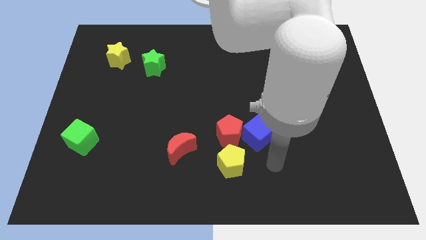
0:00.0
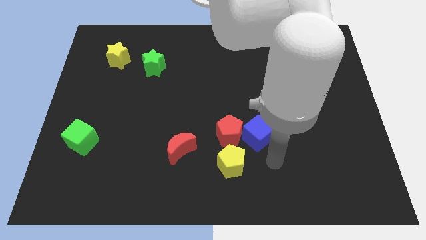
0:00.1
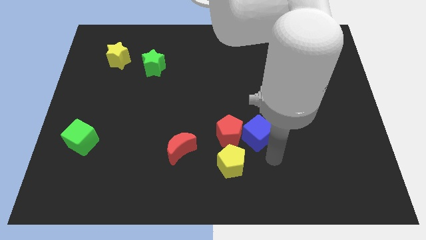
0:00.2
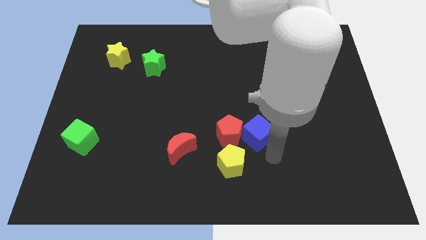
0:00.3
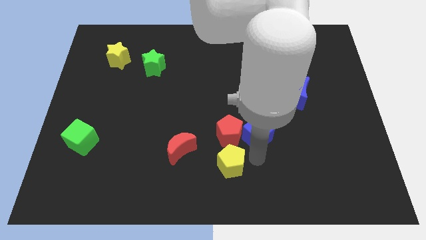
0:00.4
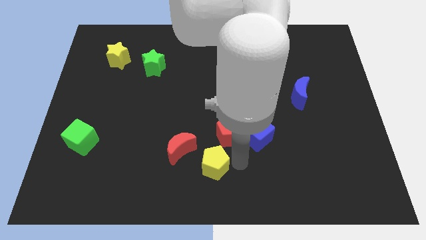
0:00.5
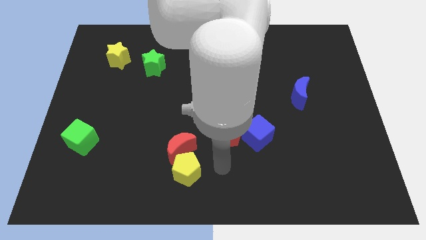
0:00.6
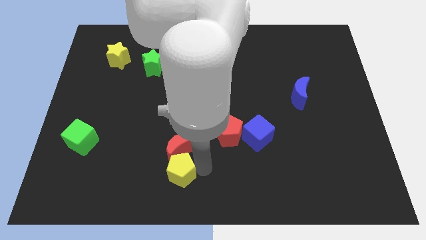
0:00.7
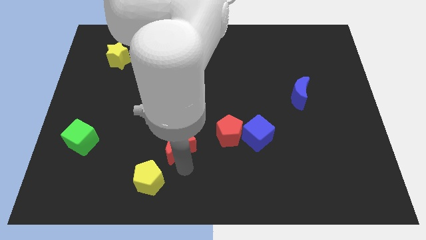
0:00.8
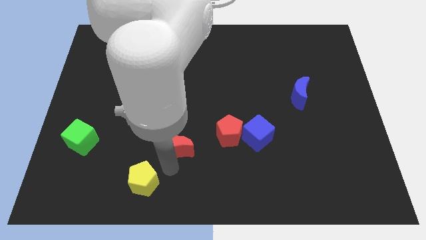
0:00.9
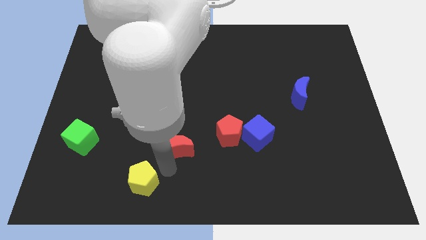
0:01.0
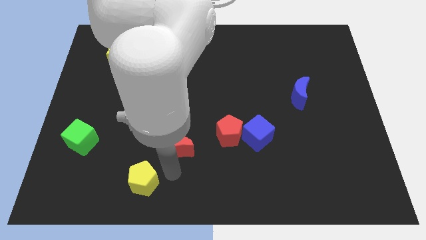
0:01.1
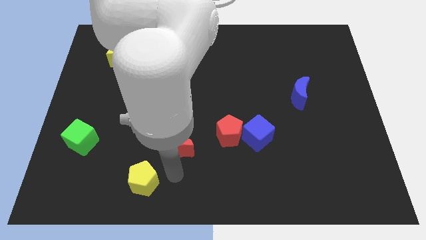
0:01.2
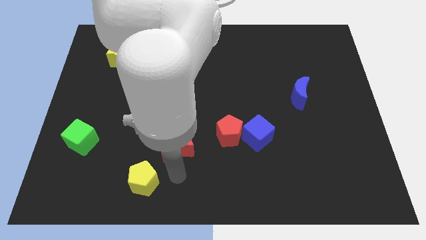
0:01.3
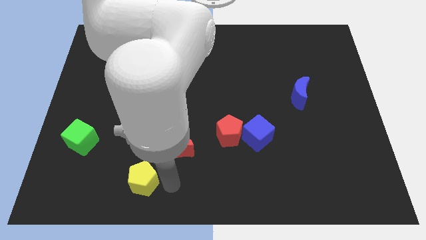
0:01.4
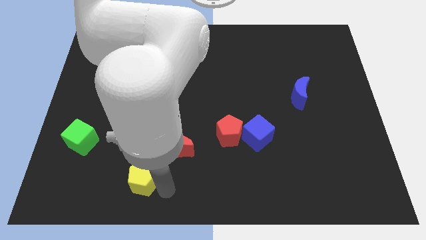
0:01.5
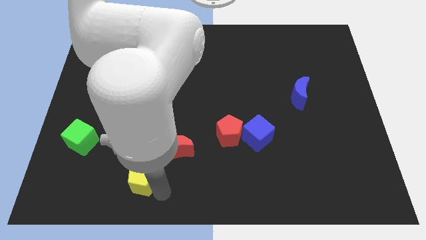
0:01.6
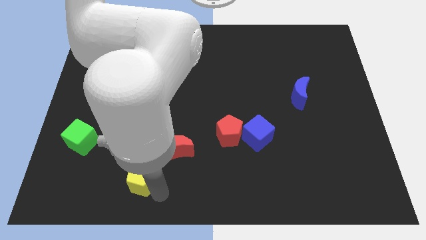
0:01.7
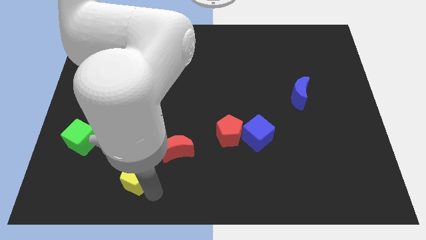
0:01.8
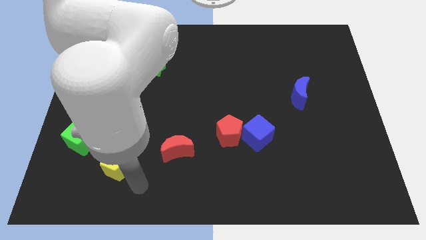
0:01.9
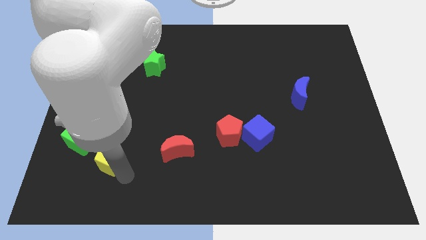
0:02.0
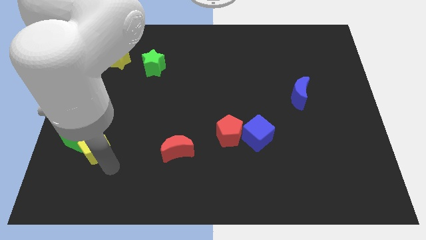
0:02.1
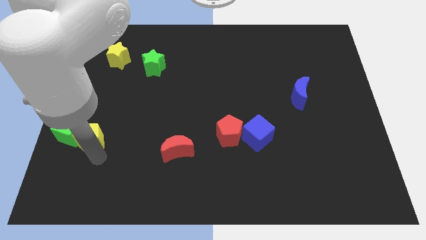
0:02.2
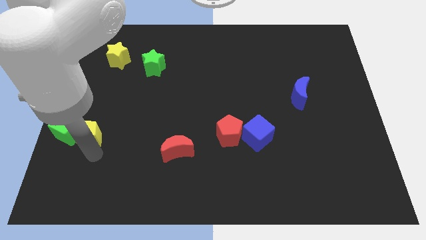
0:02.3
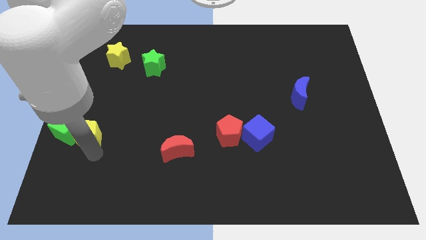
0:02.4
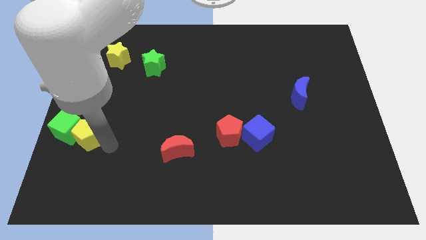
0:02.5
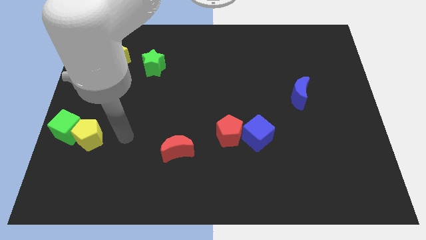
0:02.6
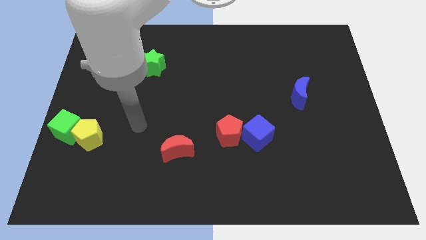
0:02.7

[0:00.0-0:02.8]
move the yellow pentagon into the green cube

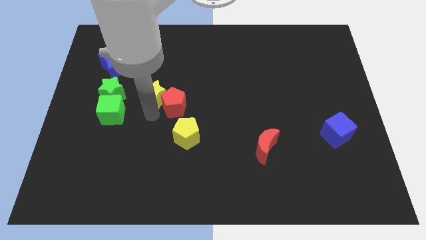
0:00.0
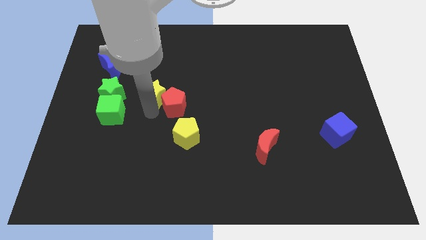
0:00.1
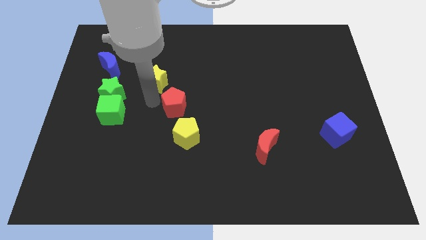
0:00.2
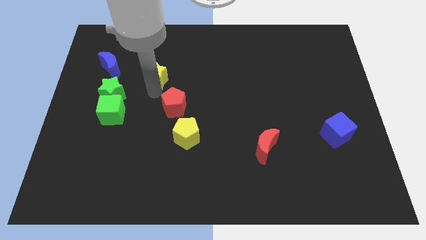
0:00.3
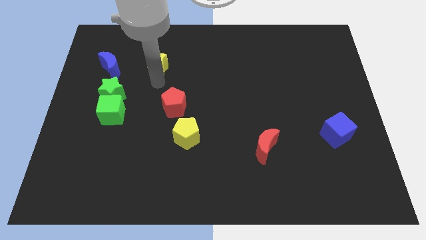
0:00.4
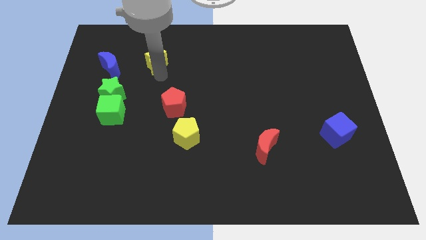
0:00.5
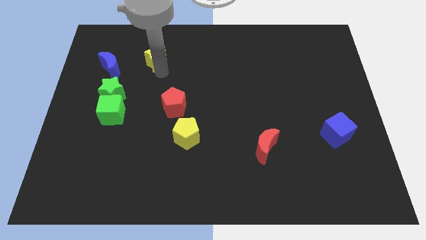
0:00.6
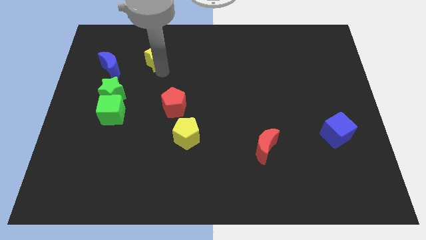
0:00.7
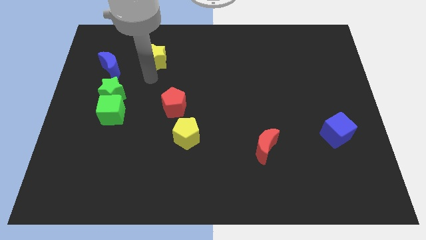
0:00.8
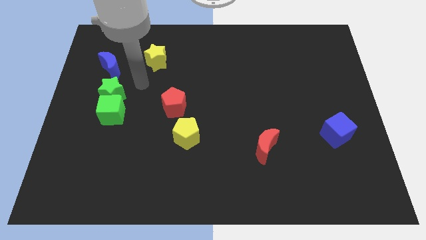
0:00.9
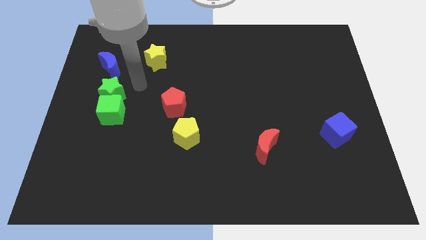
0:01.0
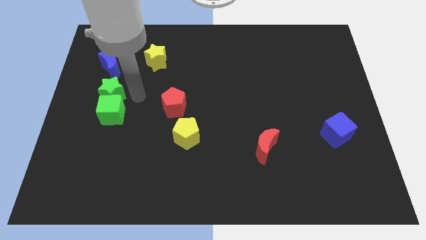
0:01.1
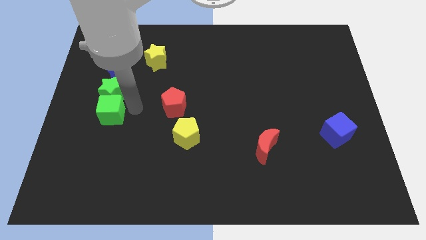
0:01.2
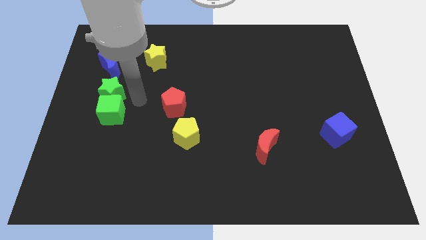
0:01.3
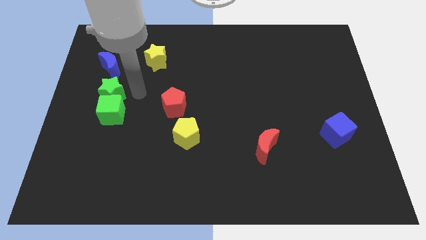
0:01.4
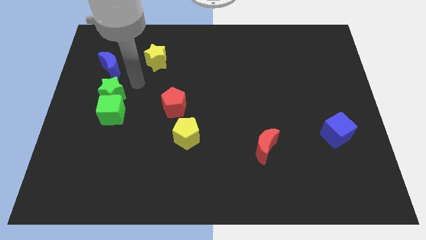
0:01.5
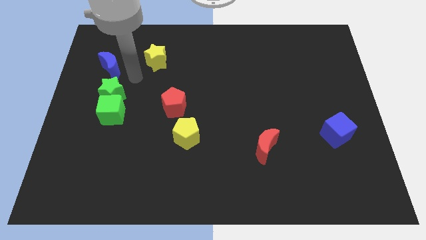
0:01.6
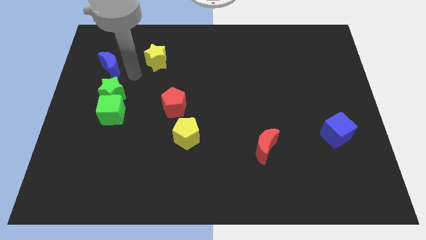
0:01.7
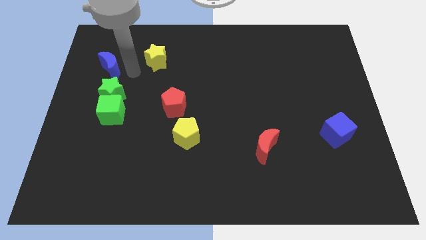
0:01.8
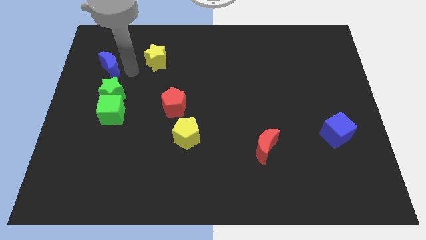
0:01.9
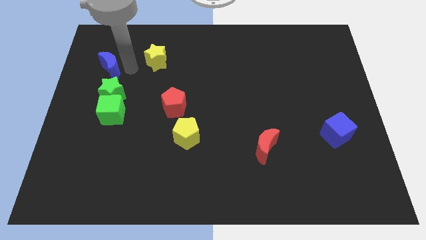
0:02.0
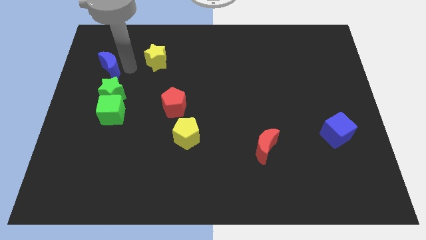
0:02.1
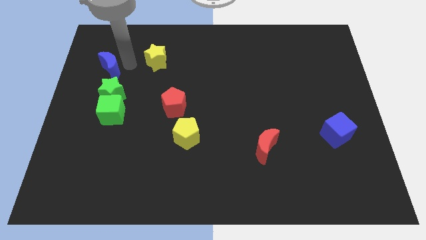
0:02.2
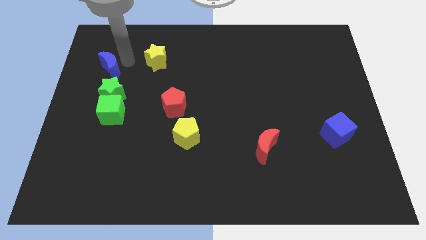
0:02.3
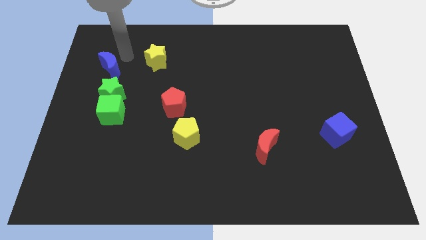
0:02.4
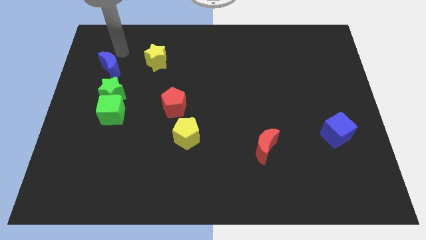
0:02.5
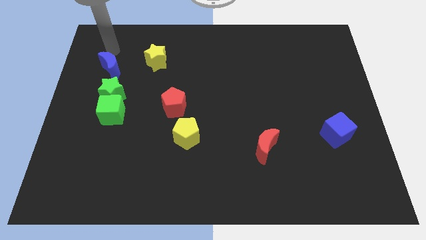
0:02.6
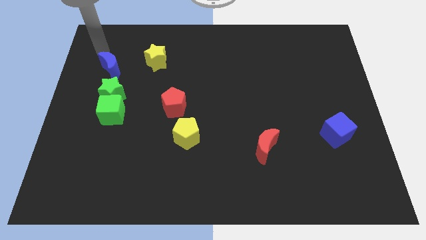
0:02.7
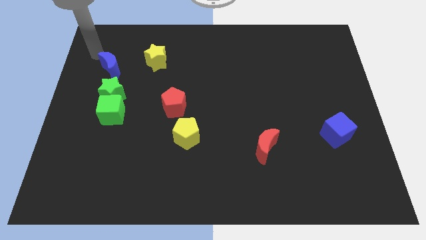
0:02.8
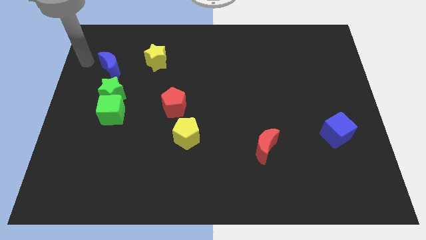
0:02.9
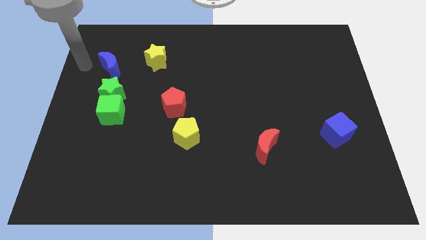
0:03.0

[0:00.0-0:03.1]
place the yellow star at the right side of the blue moon

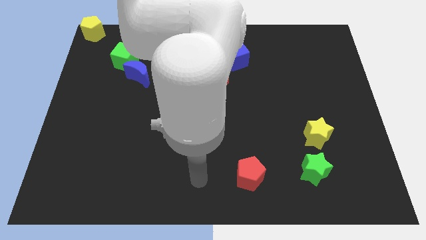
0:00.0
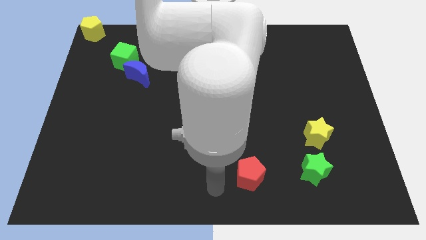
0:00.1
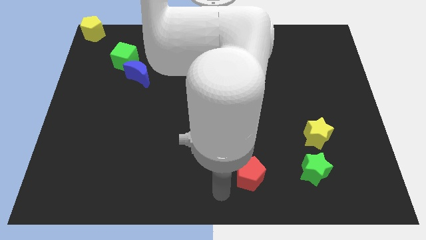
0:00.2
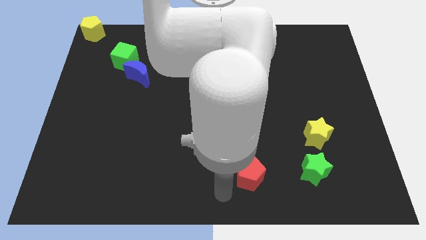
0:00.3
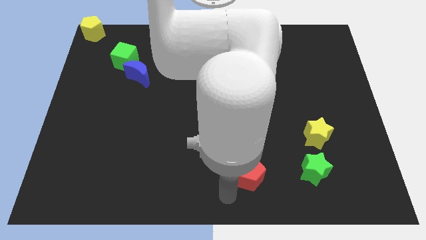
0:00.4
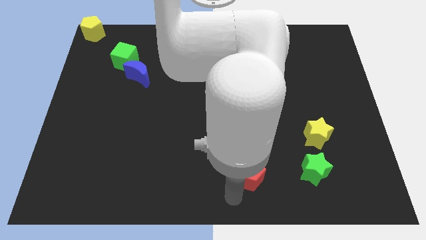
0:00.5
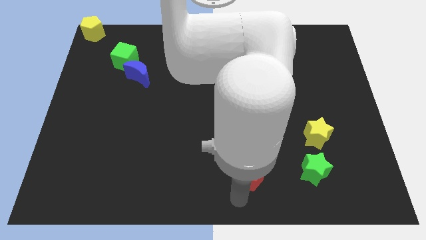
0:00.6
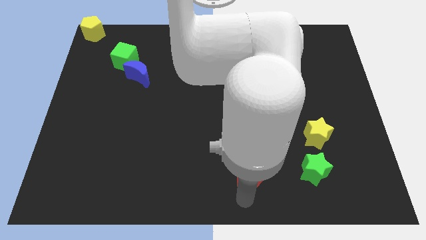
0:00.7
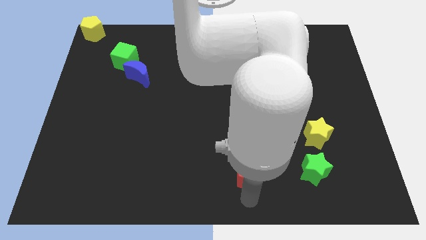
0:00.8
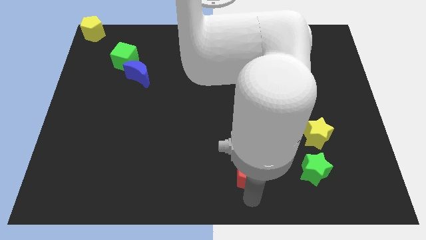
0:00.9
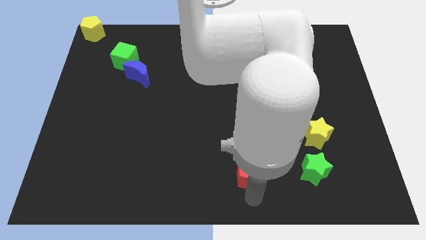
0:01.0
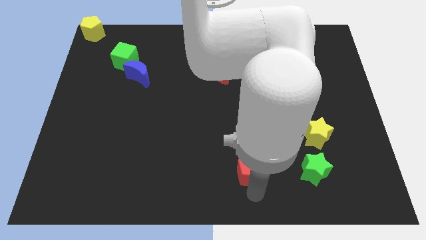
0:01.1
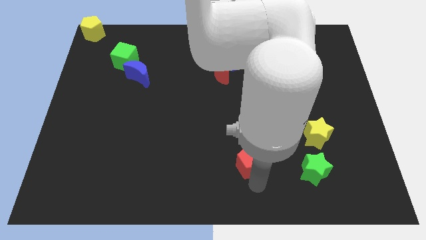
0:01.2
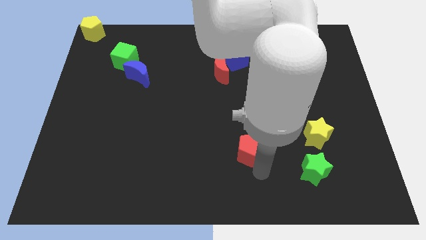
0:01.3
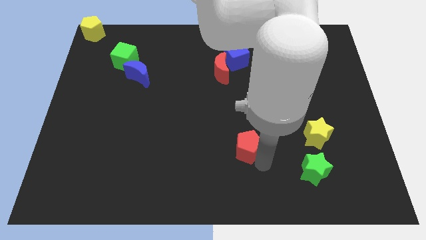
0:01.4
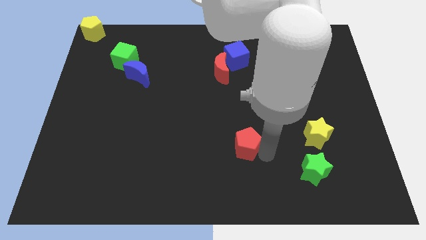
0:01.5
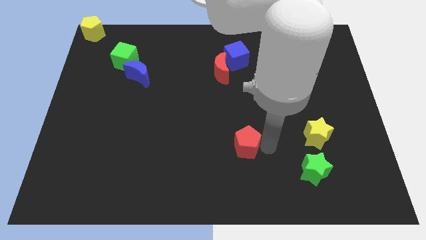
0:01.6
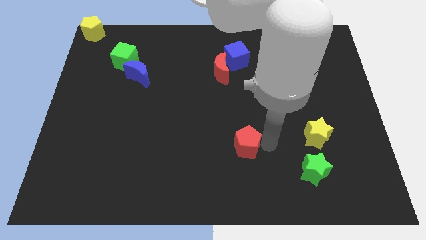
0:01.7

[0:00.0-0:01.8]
push the red pentagon to the top of the board

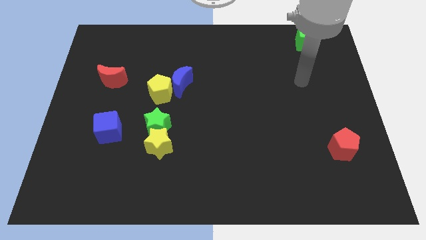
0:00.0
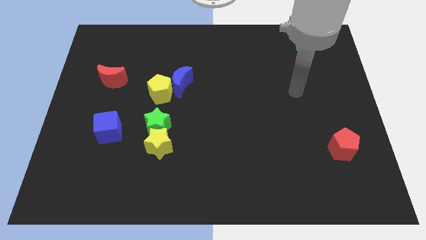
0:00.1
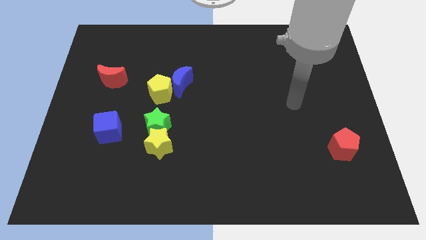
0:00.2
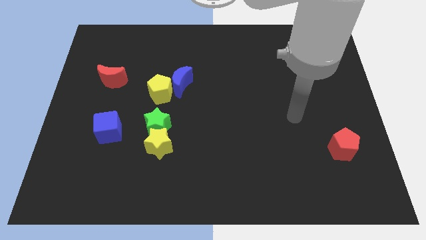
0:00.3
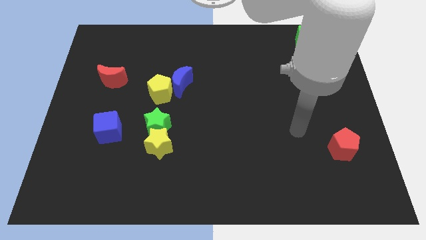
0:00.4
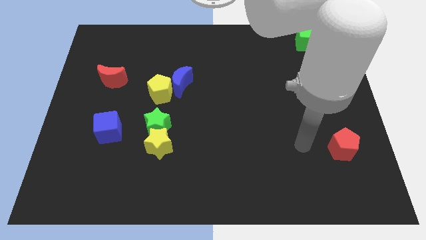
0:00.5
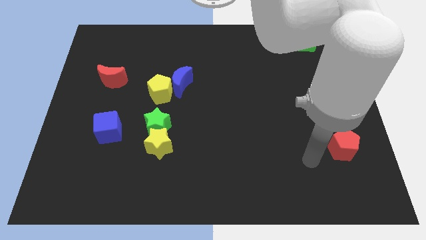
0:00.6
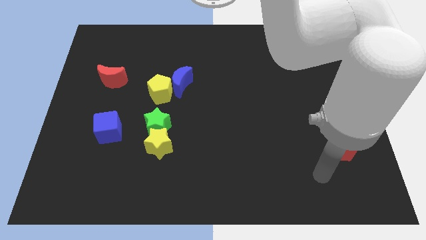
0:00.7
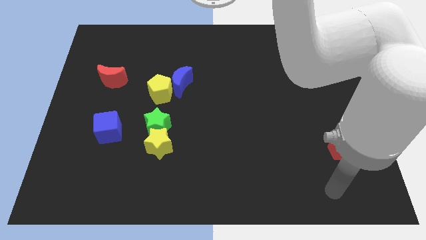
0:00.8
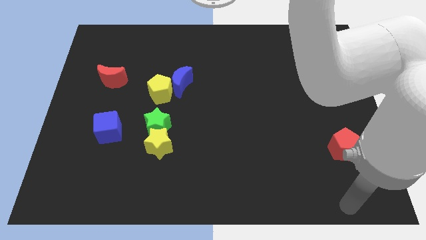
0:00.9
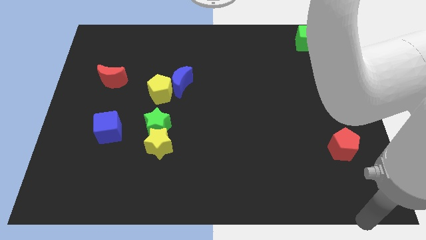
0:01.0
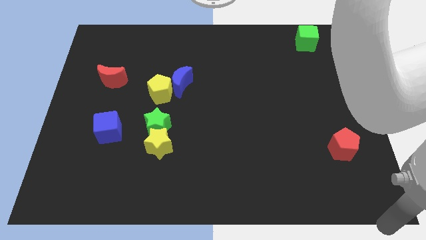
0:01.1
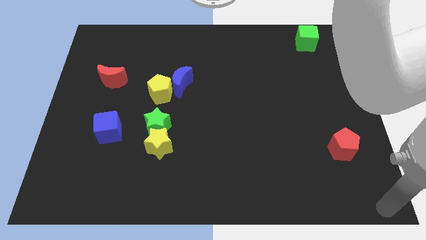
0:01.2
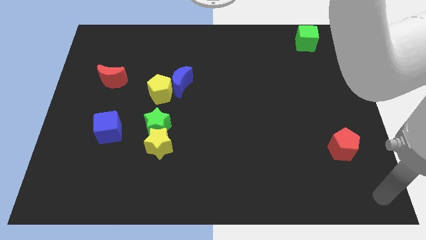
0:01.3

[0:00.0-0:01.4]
go and point your arm at the bottom right corner of the board

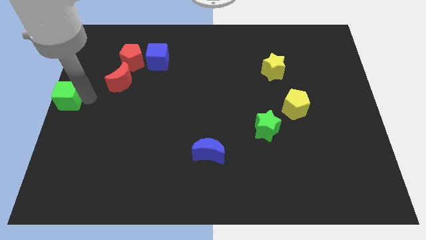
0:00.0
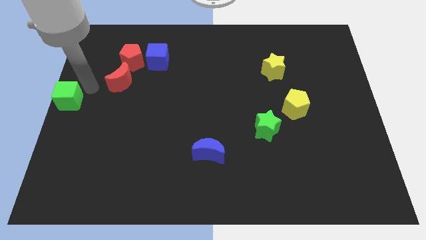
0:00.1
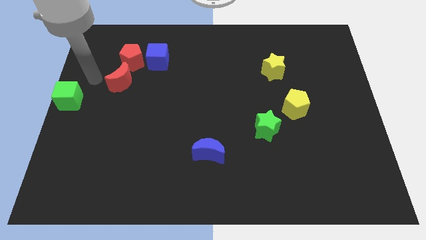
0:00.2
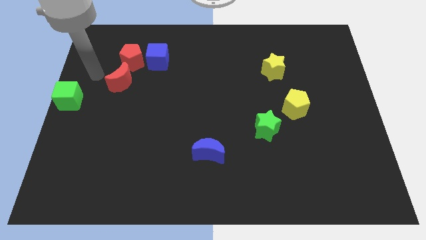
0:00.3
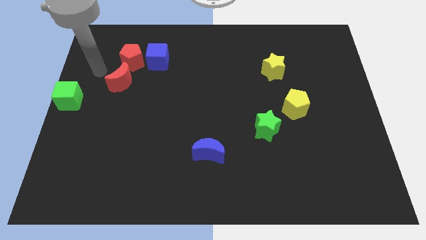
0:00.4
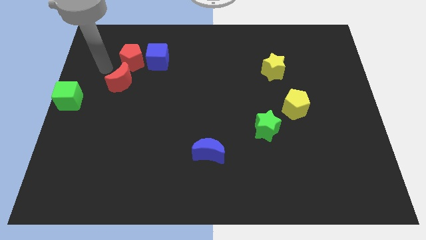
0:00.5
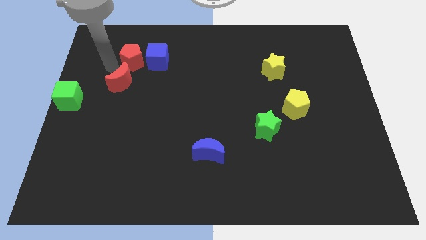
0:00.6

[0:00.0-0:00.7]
move your arm towards the red blocks
